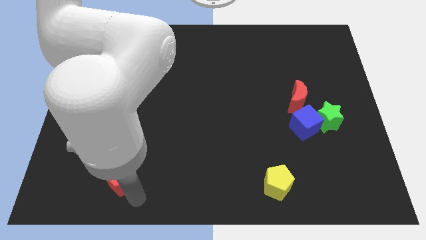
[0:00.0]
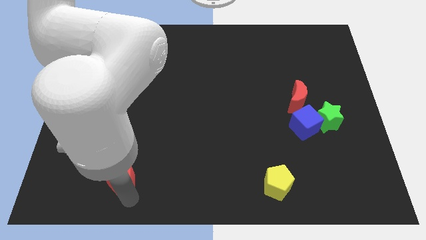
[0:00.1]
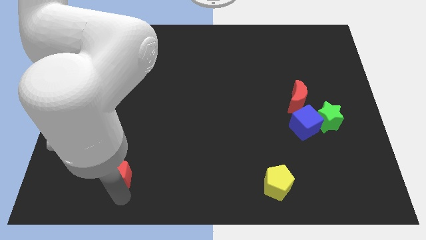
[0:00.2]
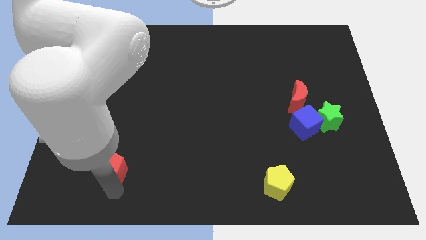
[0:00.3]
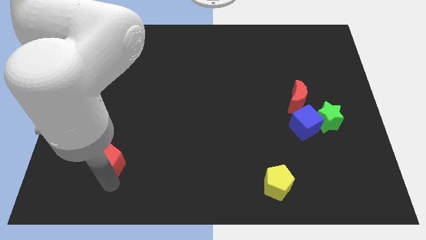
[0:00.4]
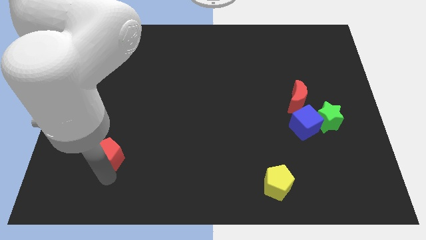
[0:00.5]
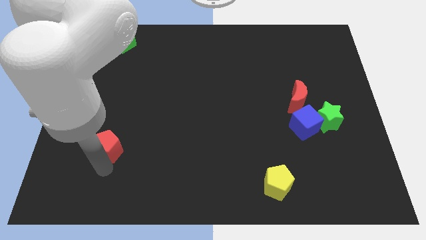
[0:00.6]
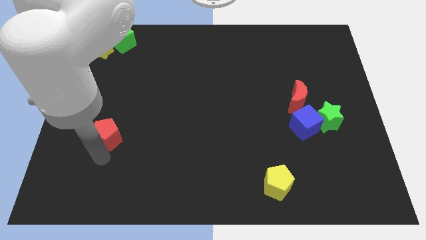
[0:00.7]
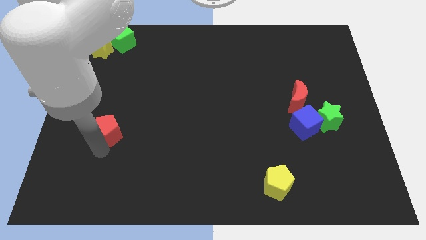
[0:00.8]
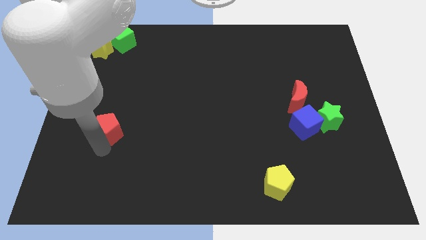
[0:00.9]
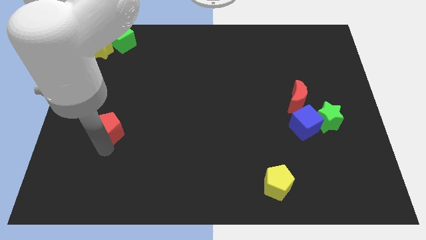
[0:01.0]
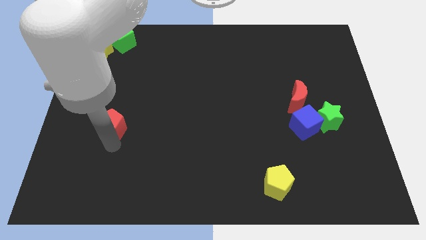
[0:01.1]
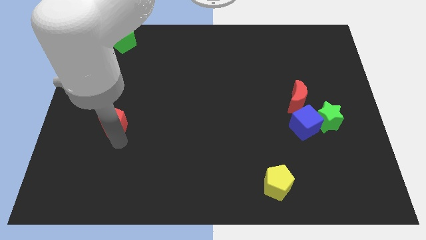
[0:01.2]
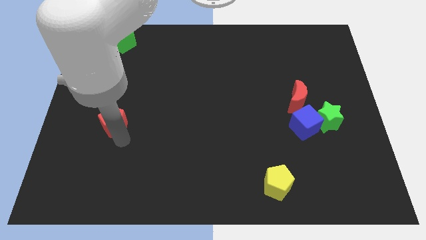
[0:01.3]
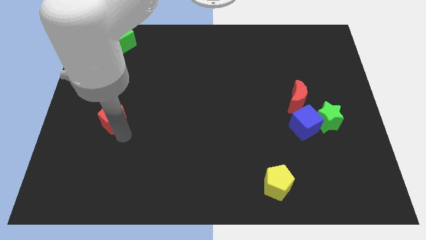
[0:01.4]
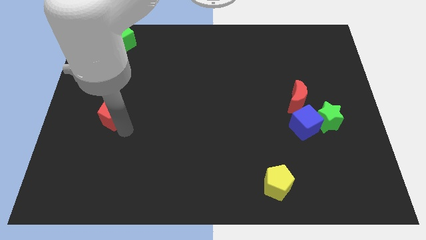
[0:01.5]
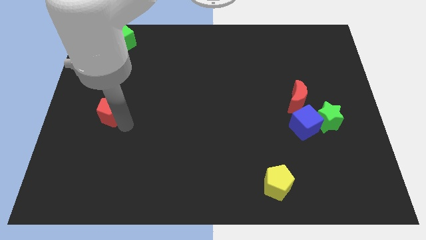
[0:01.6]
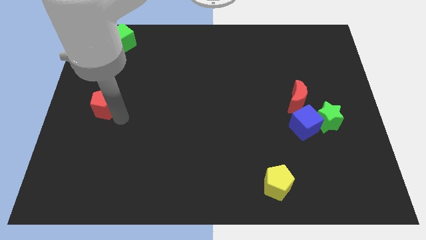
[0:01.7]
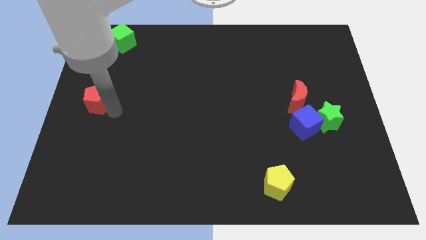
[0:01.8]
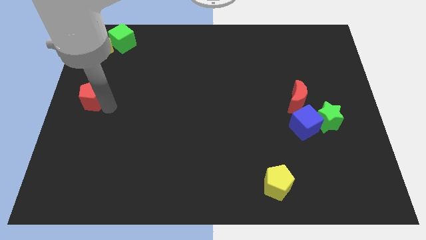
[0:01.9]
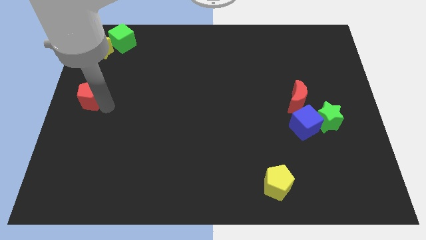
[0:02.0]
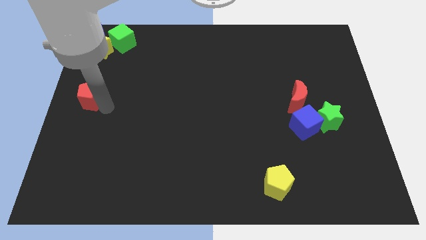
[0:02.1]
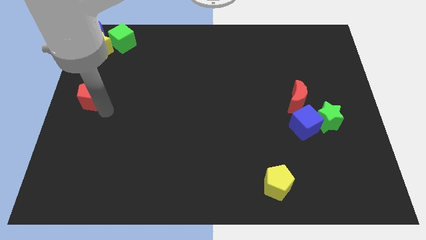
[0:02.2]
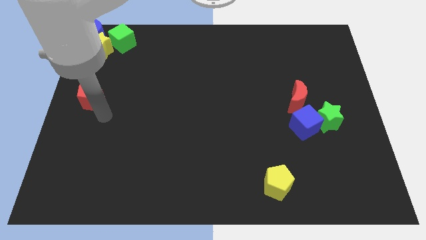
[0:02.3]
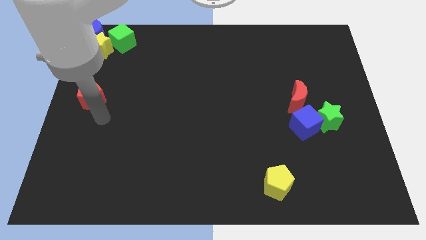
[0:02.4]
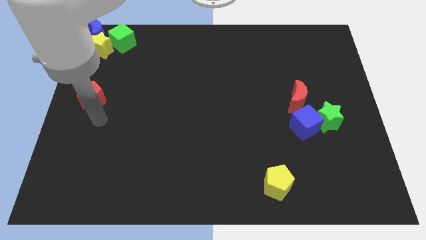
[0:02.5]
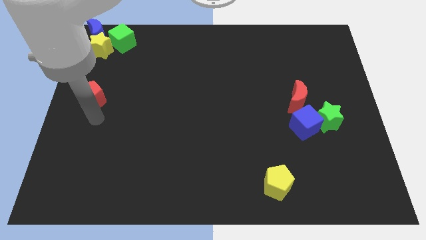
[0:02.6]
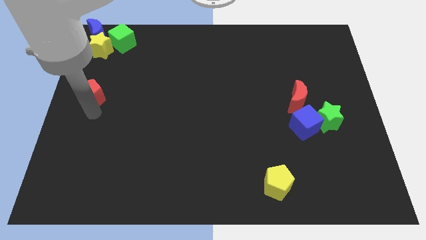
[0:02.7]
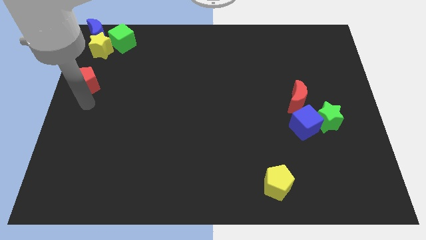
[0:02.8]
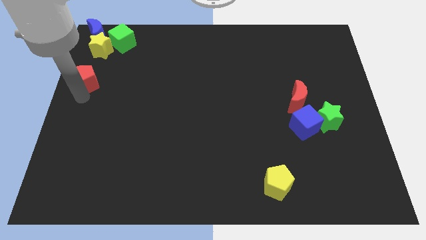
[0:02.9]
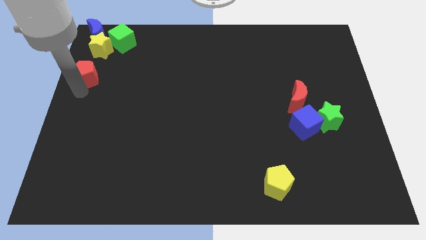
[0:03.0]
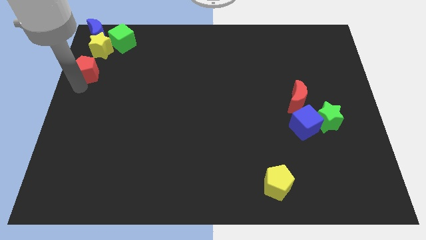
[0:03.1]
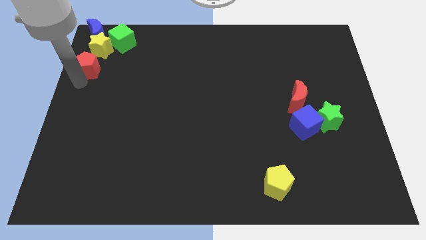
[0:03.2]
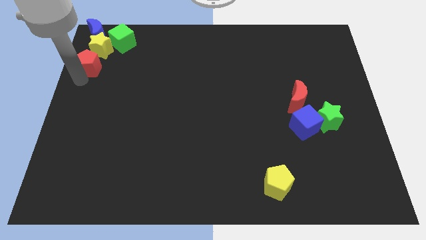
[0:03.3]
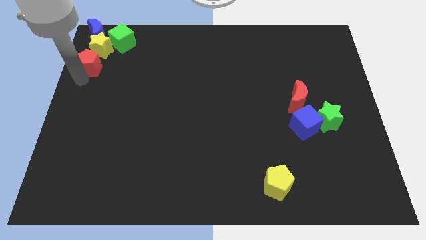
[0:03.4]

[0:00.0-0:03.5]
push the red pentagon to the bottom of the yellow star

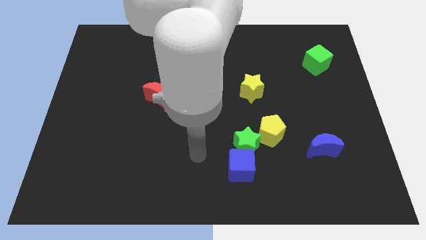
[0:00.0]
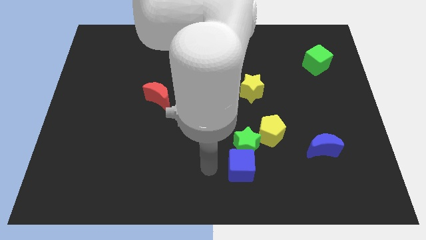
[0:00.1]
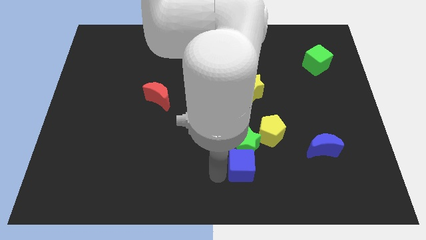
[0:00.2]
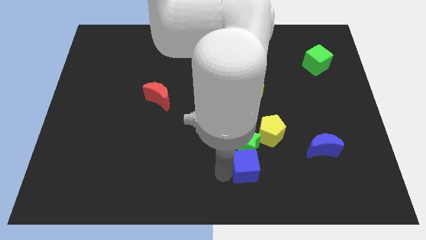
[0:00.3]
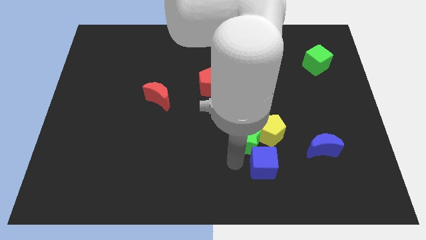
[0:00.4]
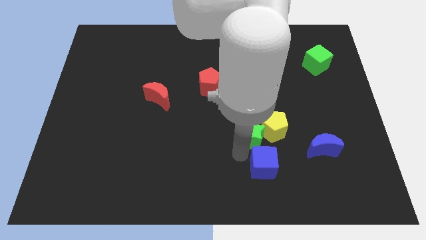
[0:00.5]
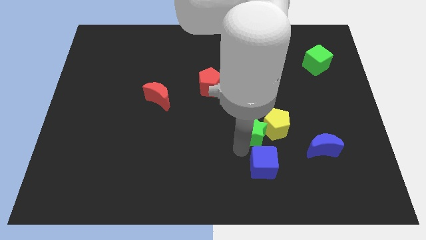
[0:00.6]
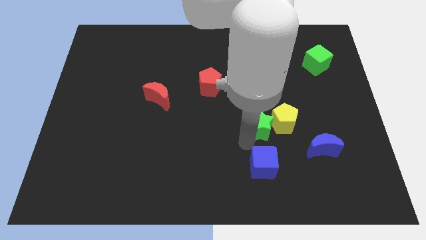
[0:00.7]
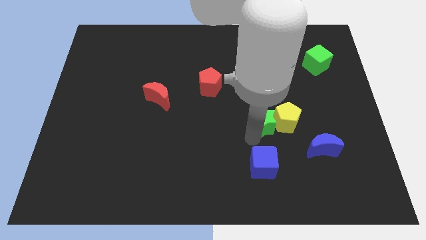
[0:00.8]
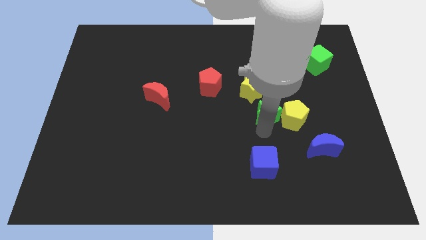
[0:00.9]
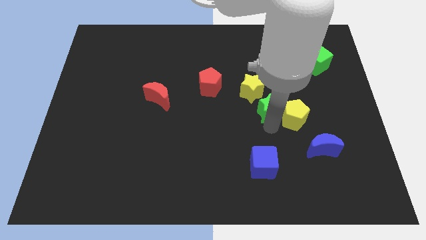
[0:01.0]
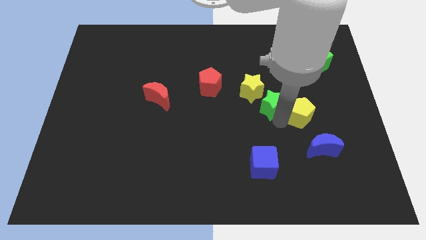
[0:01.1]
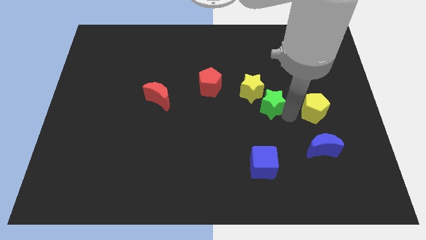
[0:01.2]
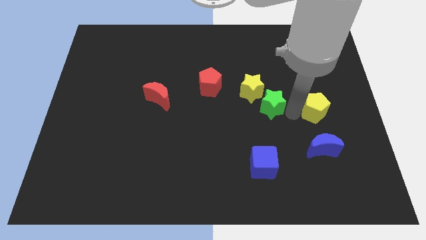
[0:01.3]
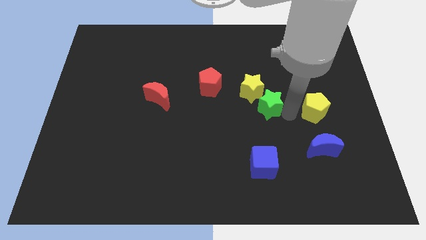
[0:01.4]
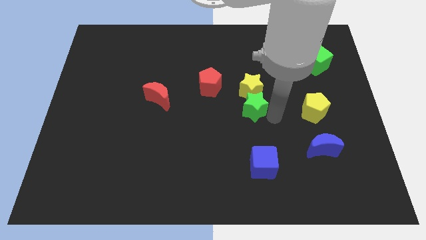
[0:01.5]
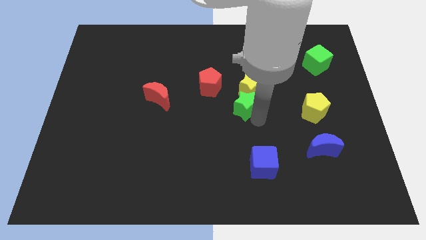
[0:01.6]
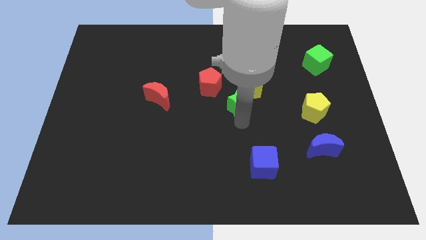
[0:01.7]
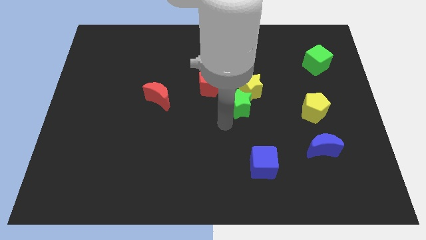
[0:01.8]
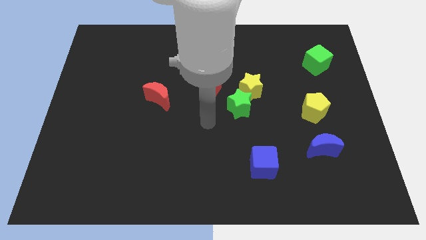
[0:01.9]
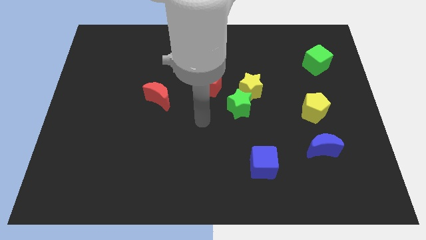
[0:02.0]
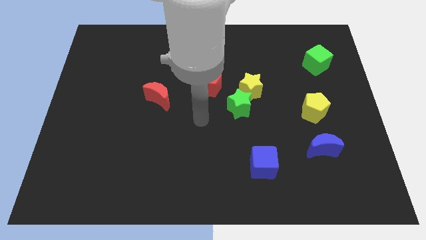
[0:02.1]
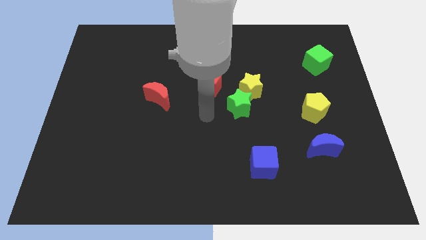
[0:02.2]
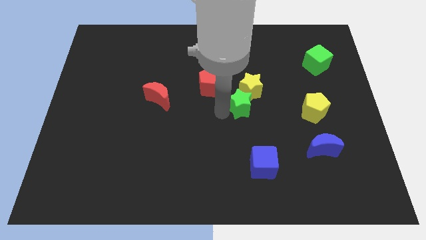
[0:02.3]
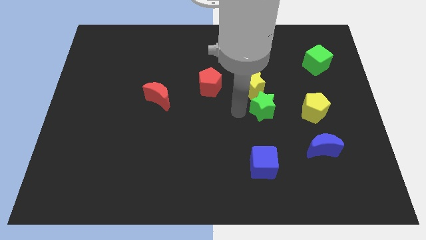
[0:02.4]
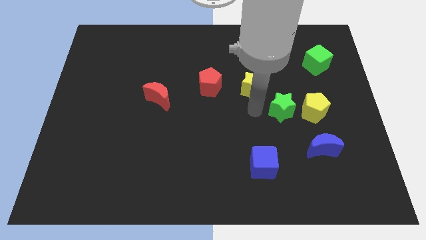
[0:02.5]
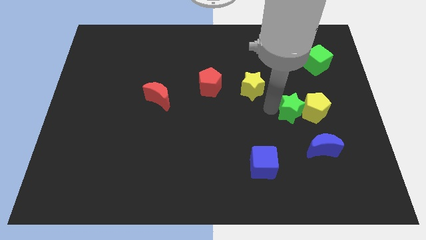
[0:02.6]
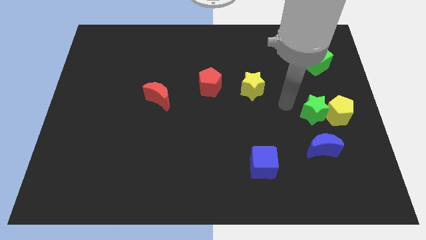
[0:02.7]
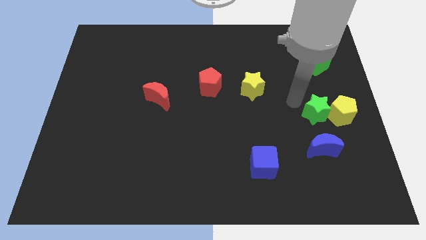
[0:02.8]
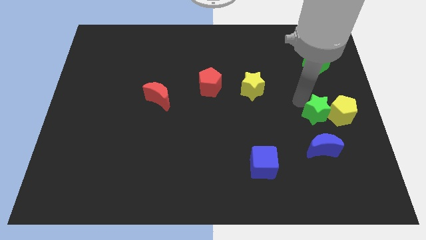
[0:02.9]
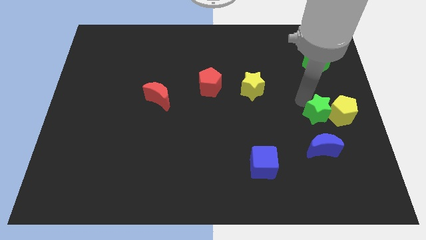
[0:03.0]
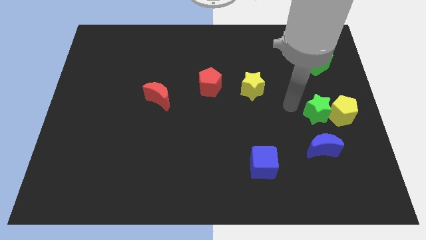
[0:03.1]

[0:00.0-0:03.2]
push the green star and yellow pentagon towards the right side of the board

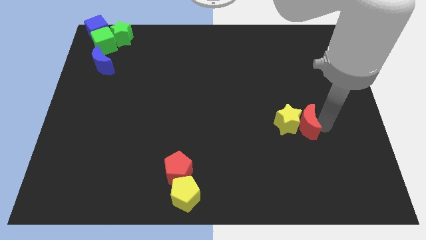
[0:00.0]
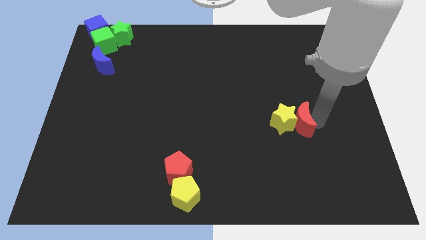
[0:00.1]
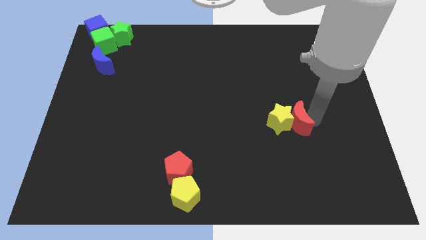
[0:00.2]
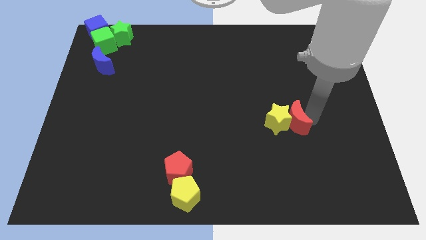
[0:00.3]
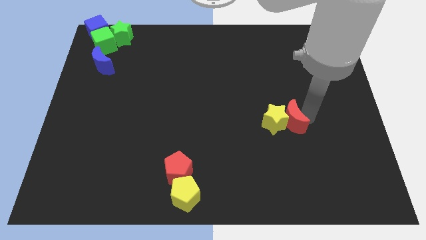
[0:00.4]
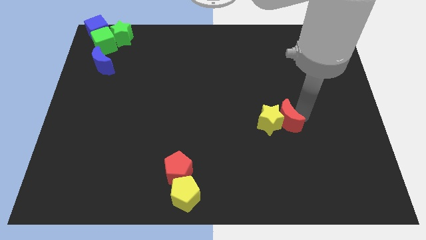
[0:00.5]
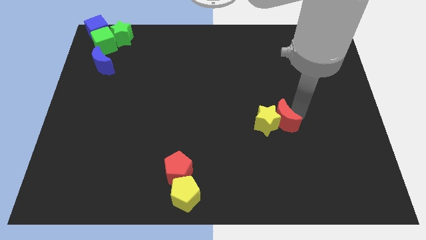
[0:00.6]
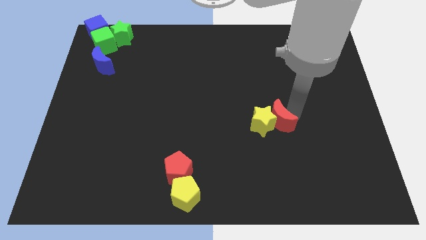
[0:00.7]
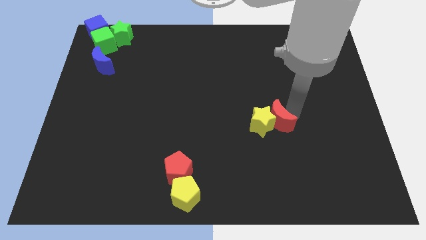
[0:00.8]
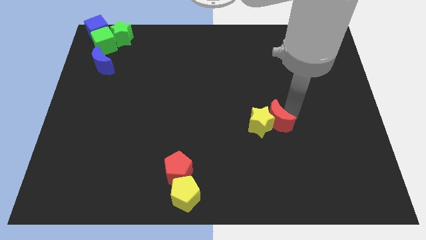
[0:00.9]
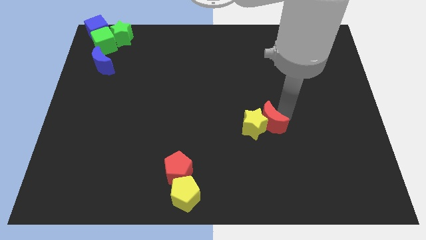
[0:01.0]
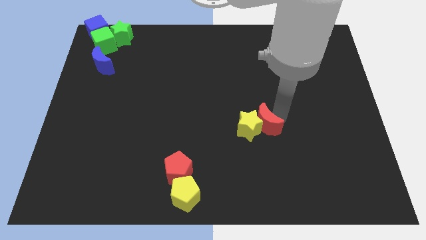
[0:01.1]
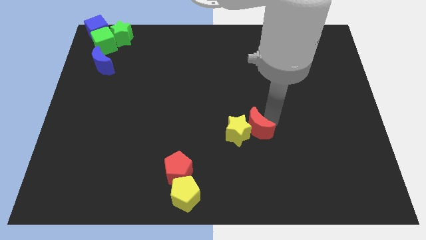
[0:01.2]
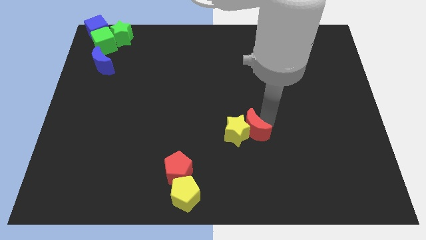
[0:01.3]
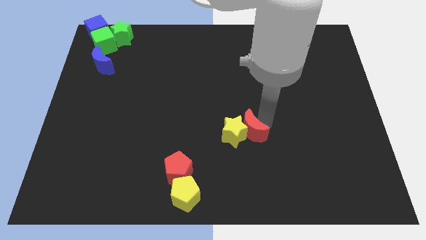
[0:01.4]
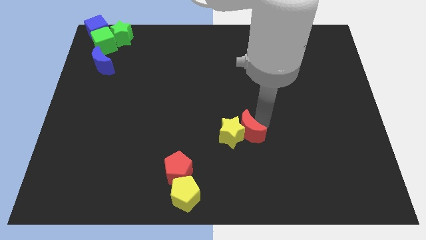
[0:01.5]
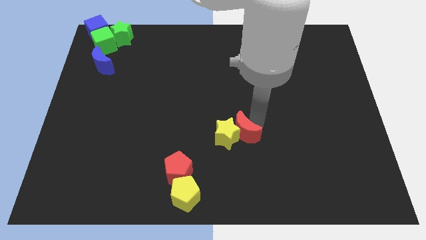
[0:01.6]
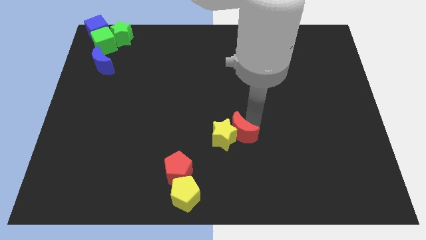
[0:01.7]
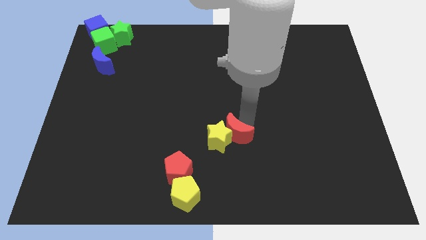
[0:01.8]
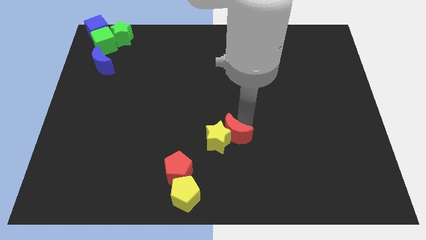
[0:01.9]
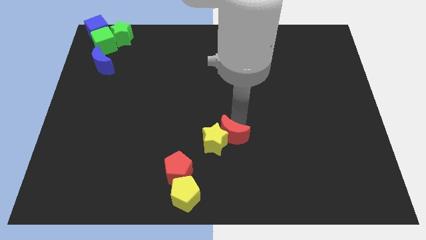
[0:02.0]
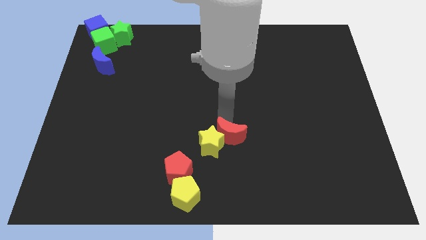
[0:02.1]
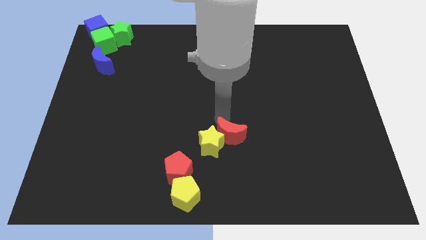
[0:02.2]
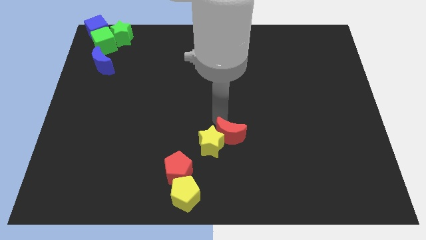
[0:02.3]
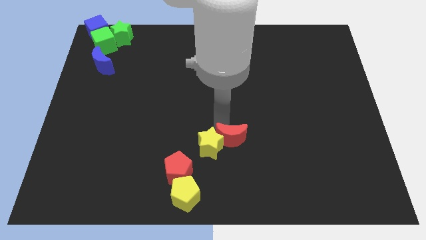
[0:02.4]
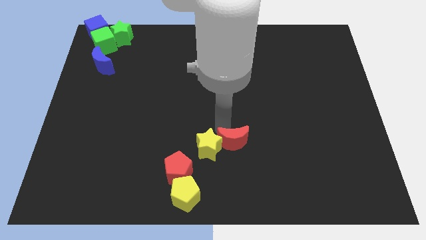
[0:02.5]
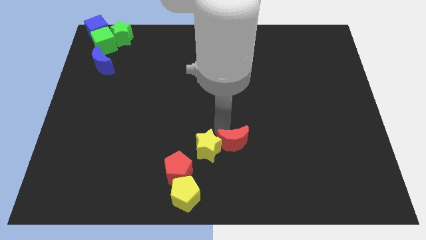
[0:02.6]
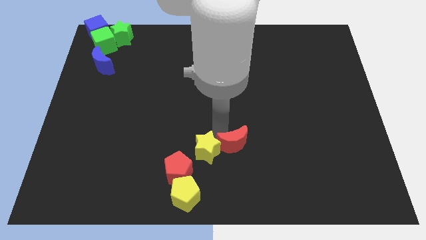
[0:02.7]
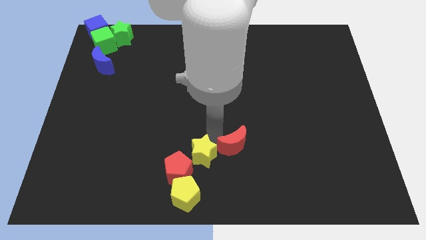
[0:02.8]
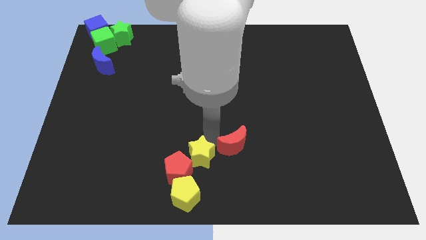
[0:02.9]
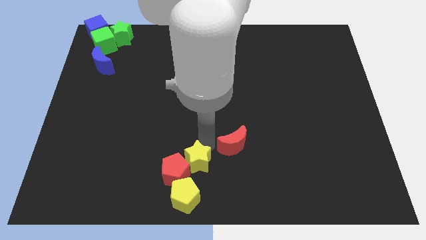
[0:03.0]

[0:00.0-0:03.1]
place the yellow star and red moon above the red pentagon
